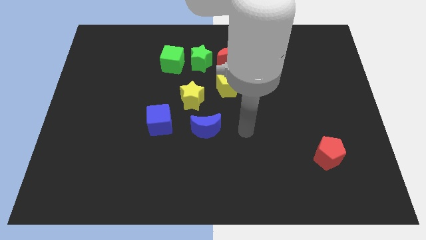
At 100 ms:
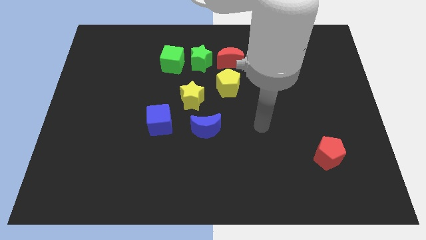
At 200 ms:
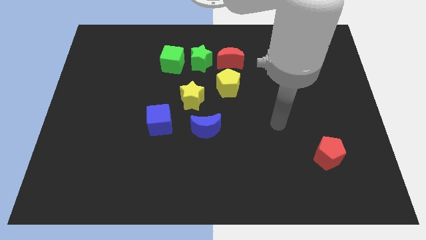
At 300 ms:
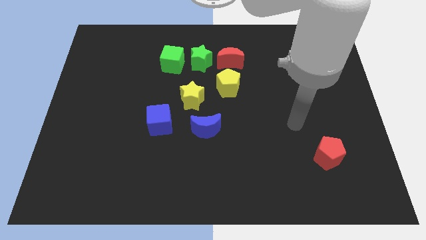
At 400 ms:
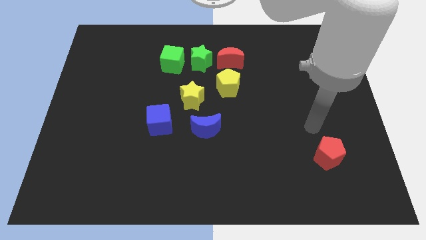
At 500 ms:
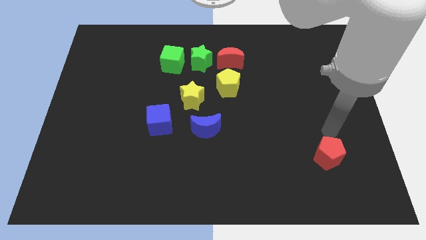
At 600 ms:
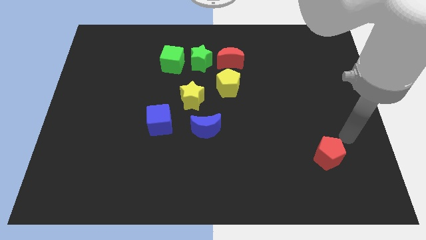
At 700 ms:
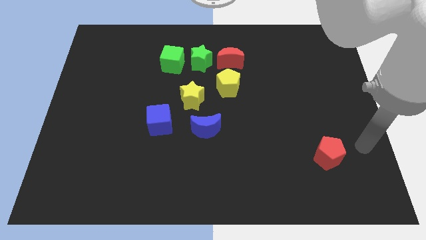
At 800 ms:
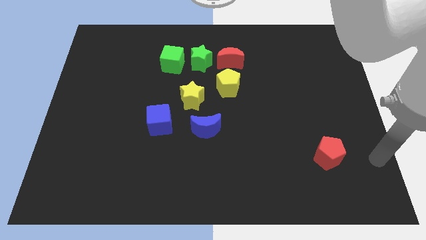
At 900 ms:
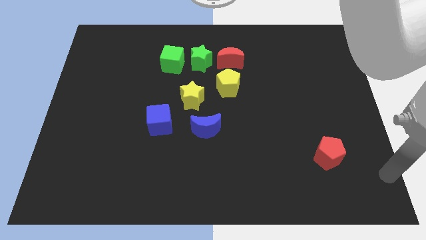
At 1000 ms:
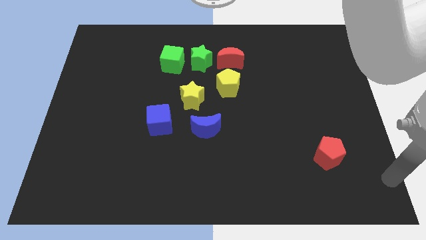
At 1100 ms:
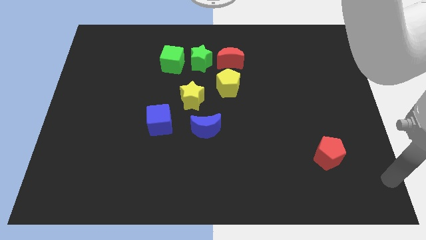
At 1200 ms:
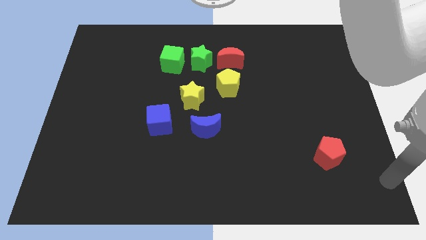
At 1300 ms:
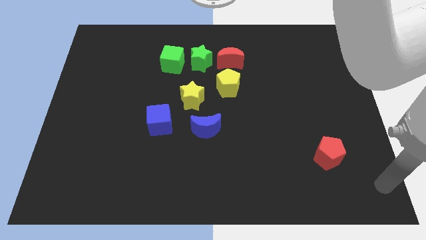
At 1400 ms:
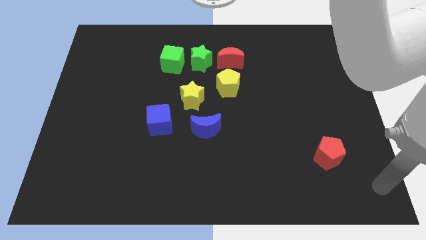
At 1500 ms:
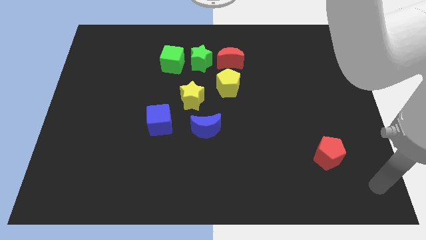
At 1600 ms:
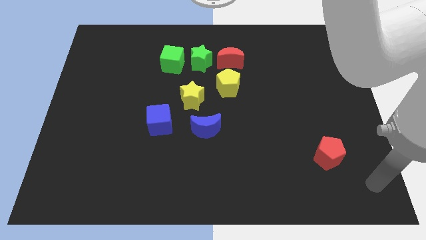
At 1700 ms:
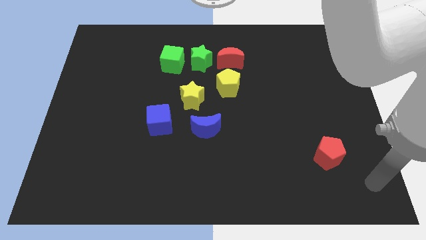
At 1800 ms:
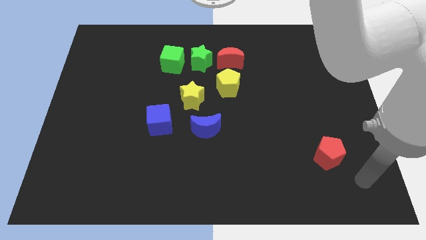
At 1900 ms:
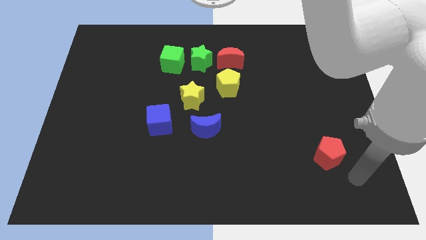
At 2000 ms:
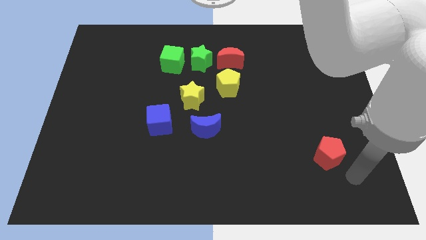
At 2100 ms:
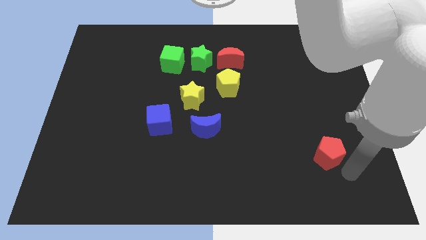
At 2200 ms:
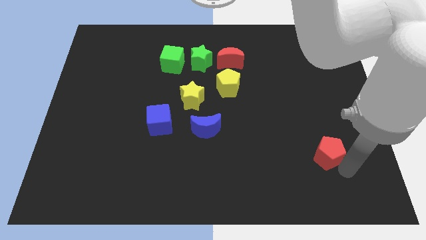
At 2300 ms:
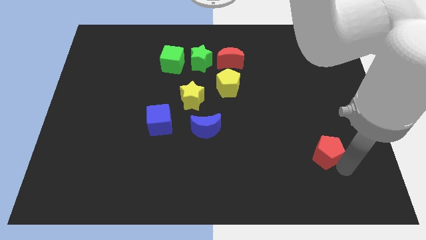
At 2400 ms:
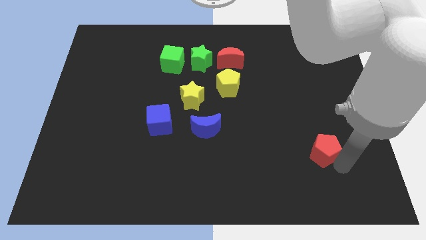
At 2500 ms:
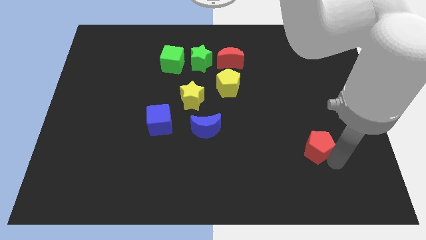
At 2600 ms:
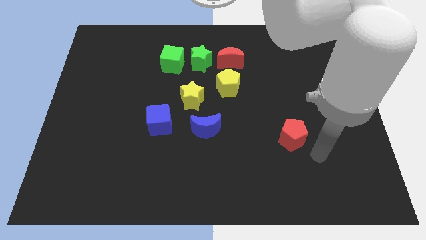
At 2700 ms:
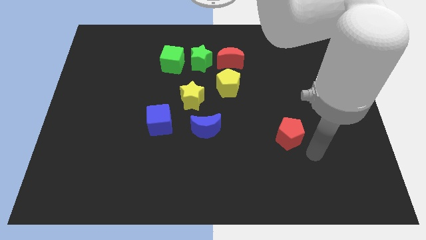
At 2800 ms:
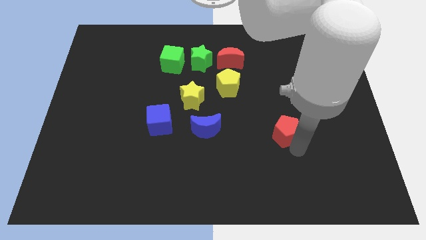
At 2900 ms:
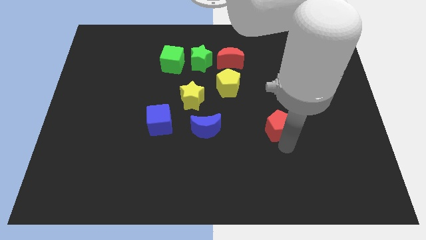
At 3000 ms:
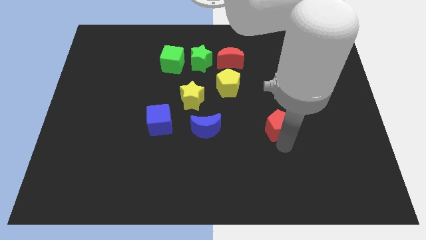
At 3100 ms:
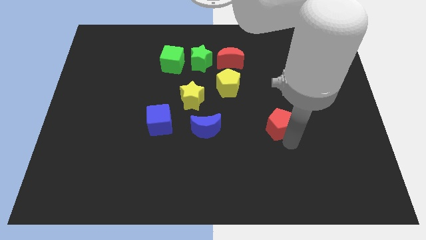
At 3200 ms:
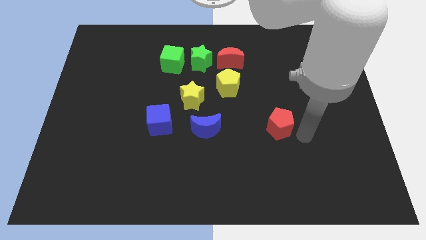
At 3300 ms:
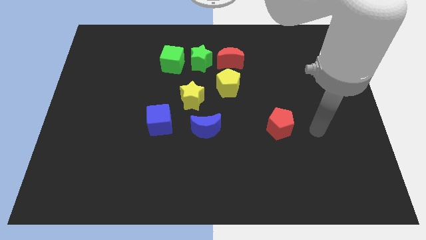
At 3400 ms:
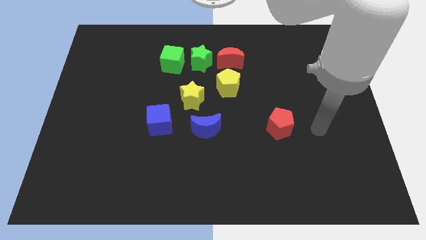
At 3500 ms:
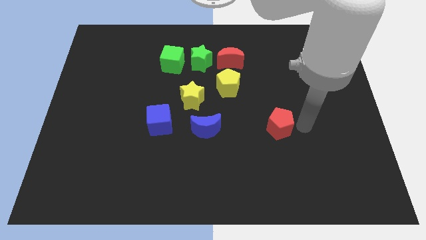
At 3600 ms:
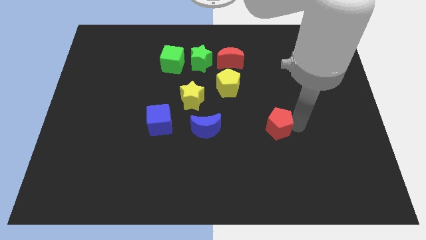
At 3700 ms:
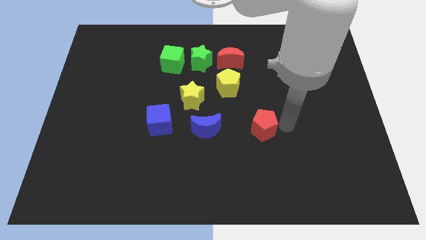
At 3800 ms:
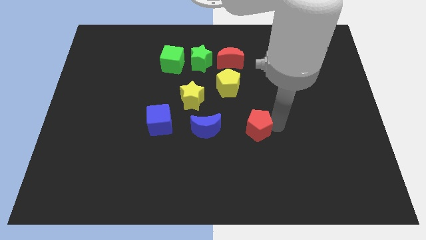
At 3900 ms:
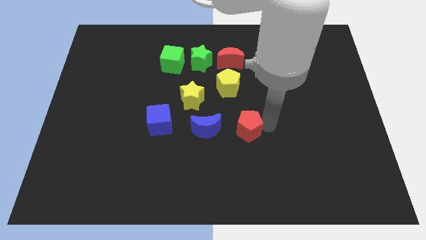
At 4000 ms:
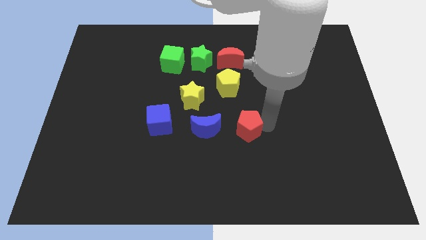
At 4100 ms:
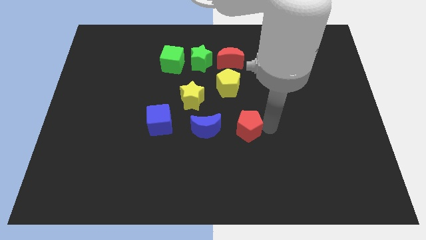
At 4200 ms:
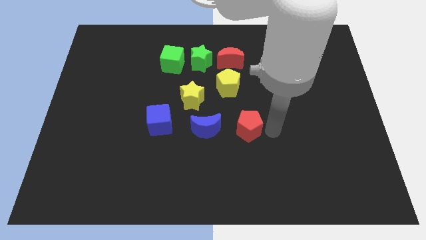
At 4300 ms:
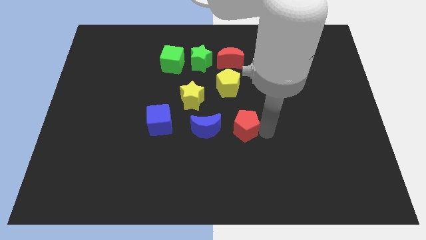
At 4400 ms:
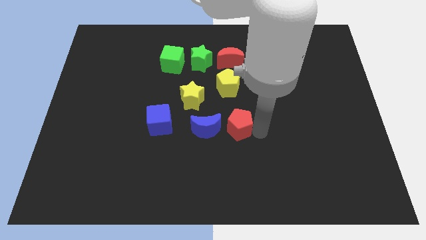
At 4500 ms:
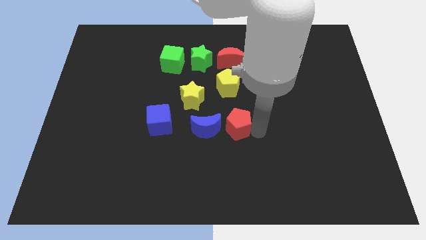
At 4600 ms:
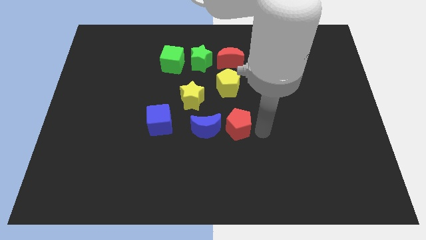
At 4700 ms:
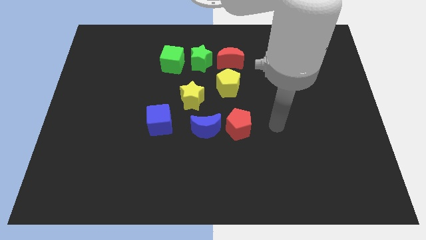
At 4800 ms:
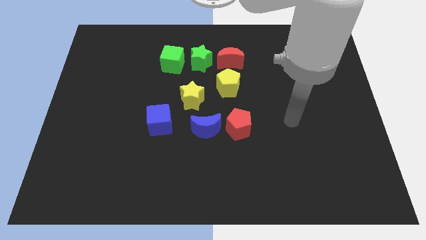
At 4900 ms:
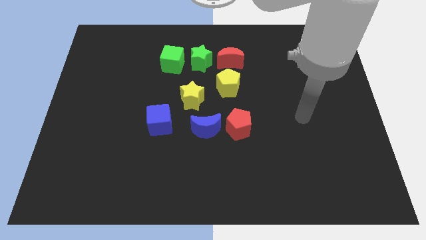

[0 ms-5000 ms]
push red pentagon to the right of blue moon

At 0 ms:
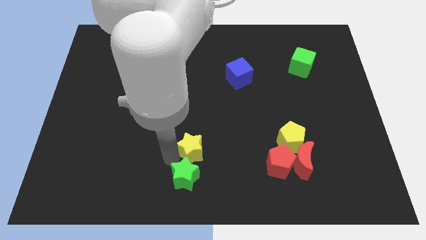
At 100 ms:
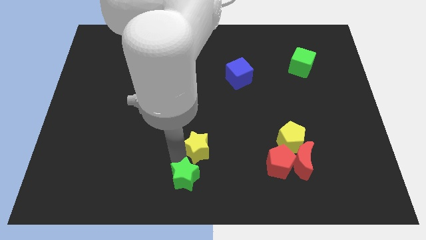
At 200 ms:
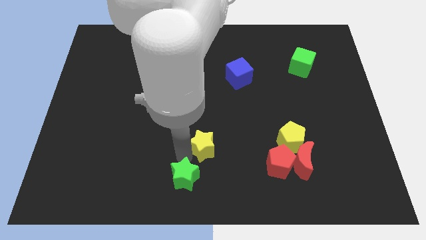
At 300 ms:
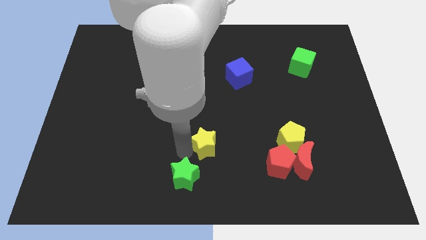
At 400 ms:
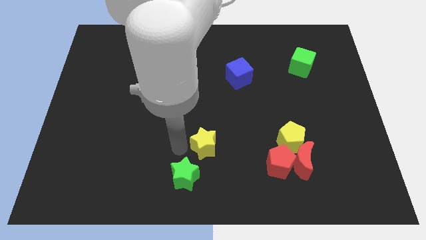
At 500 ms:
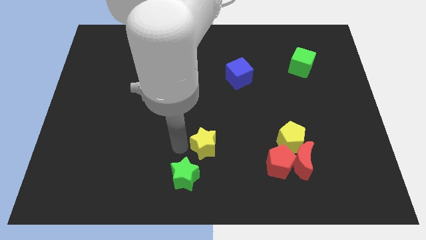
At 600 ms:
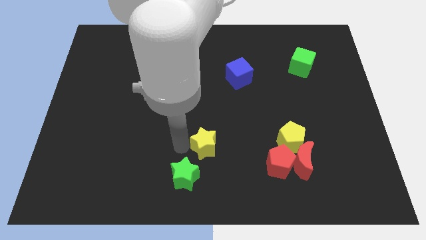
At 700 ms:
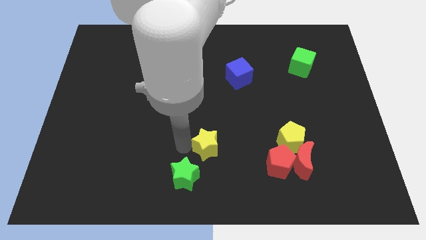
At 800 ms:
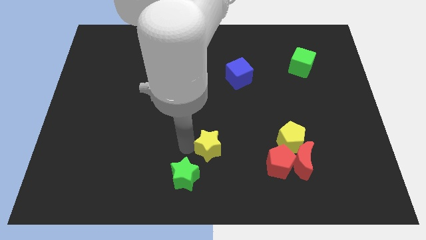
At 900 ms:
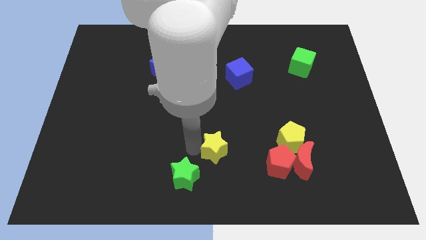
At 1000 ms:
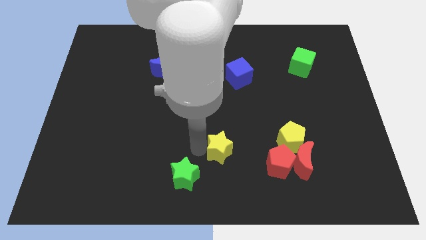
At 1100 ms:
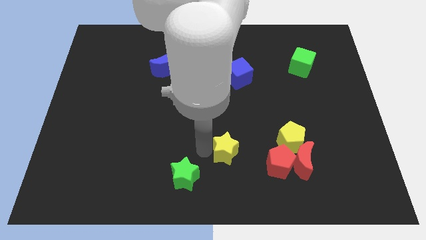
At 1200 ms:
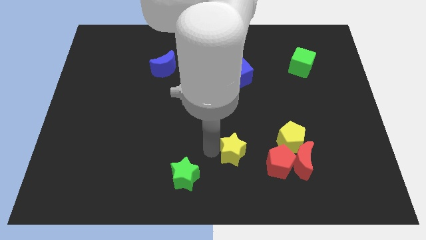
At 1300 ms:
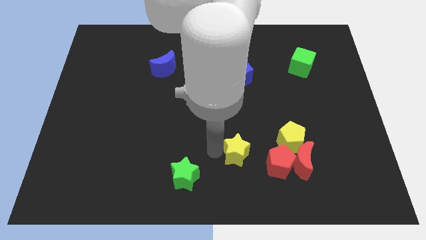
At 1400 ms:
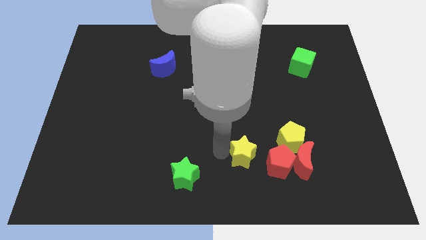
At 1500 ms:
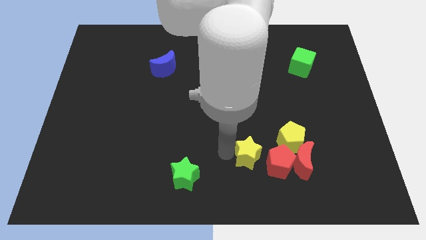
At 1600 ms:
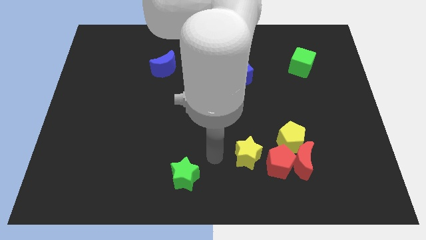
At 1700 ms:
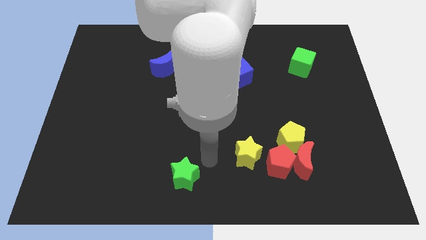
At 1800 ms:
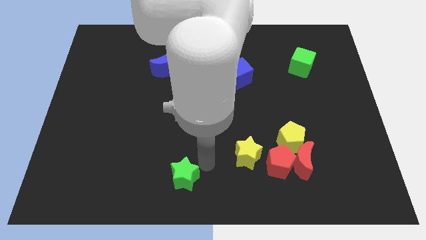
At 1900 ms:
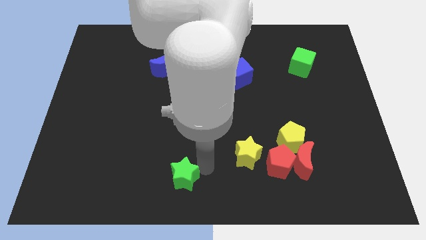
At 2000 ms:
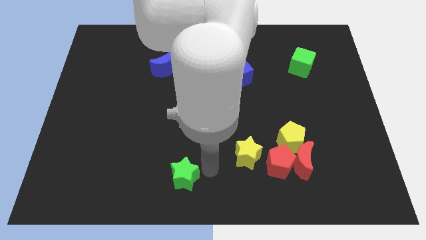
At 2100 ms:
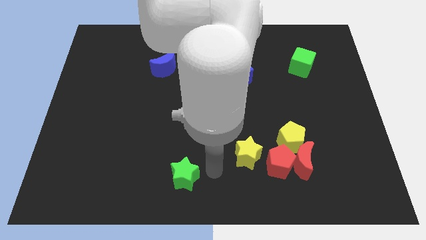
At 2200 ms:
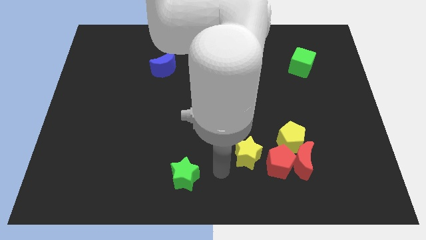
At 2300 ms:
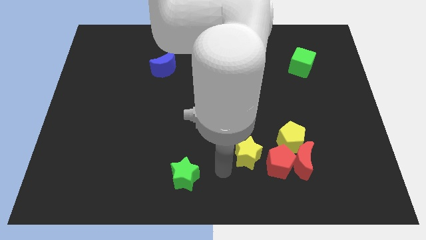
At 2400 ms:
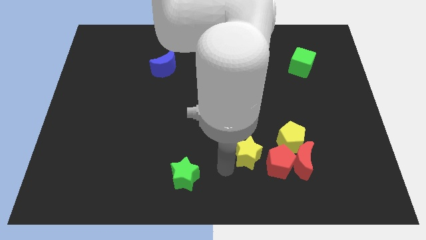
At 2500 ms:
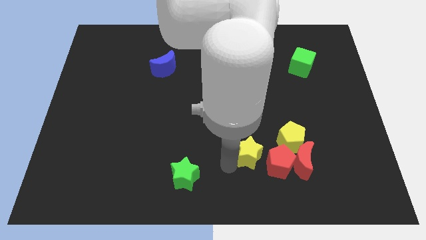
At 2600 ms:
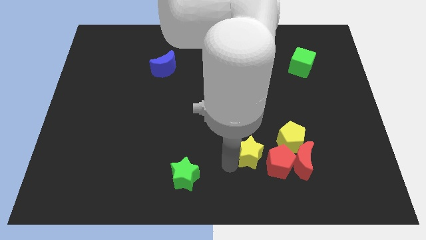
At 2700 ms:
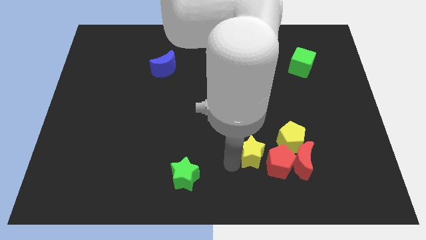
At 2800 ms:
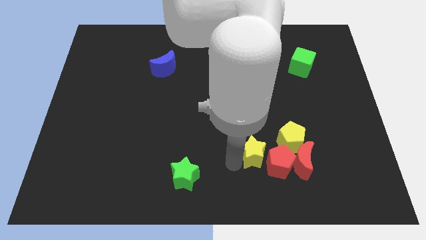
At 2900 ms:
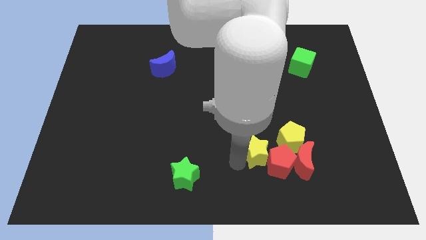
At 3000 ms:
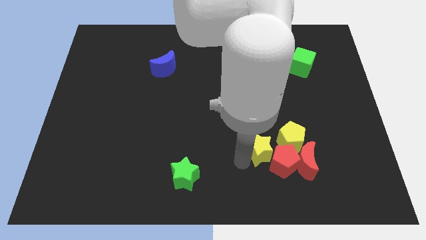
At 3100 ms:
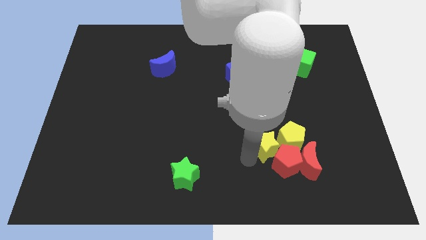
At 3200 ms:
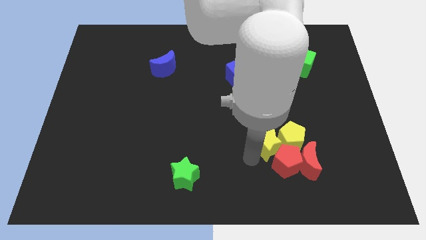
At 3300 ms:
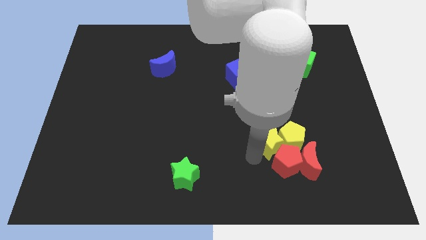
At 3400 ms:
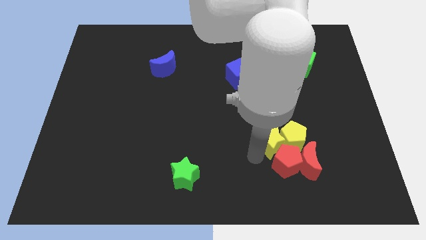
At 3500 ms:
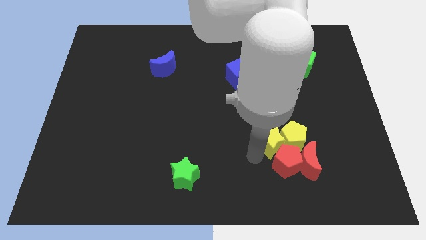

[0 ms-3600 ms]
push the yellow star to the left of the yellow pentagon

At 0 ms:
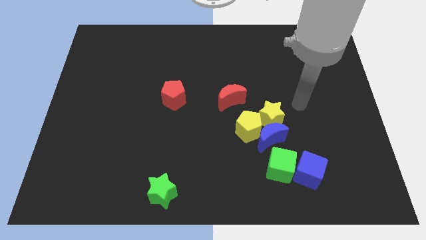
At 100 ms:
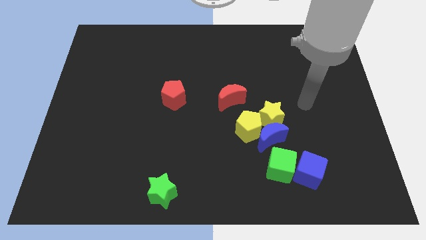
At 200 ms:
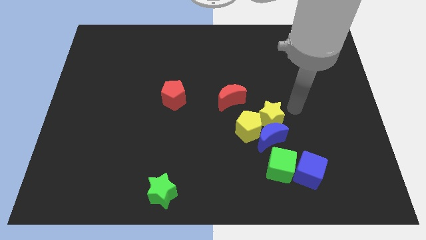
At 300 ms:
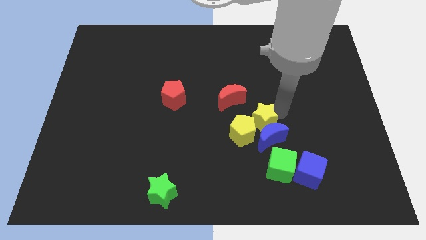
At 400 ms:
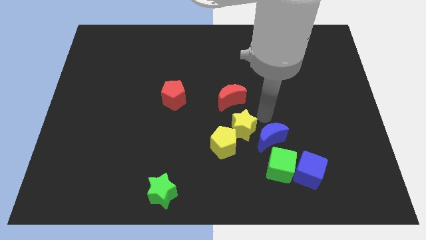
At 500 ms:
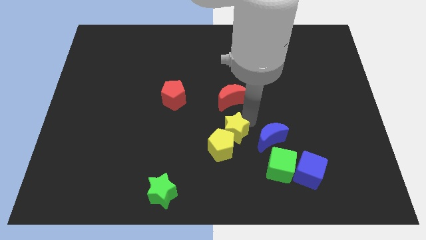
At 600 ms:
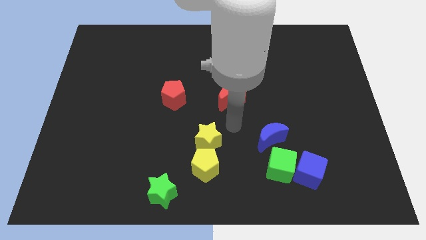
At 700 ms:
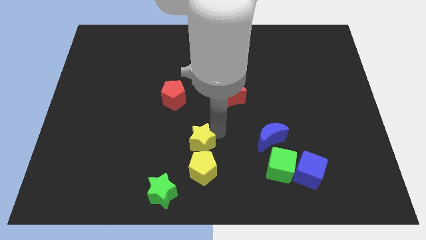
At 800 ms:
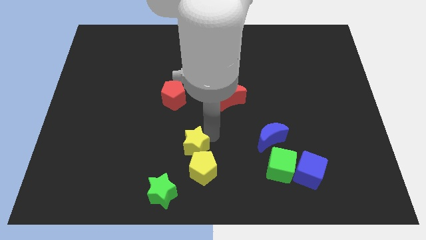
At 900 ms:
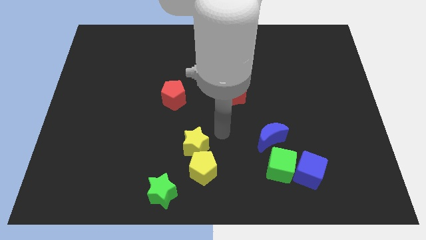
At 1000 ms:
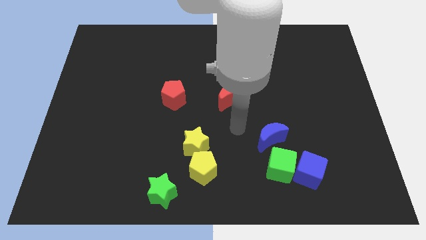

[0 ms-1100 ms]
push yellow blocks towards green star
